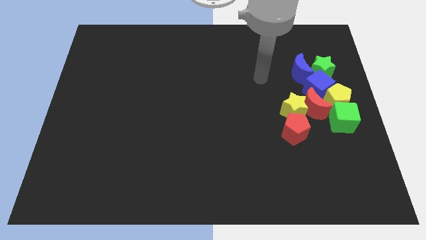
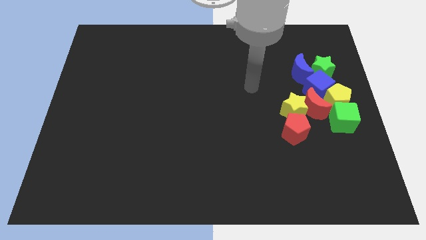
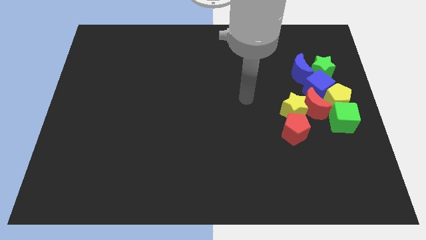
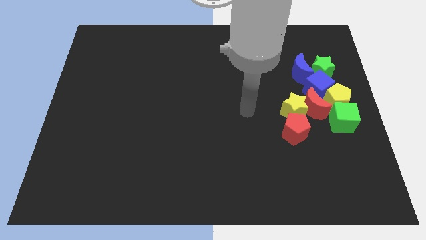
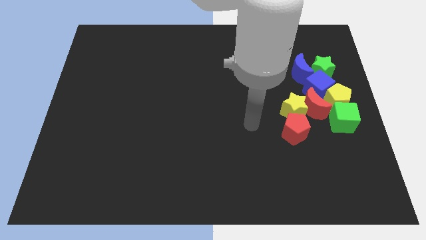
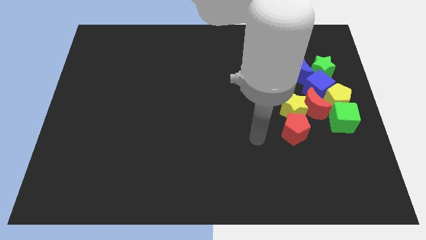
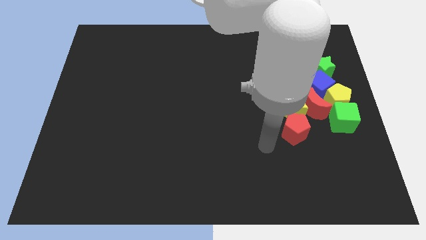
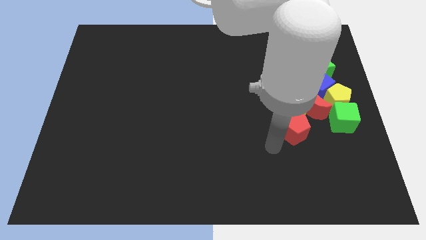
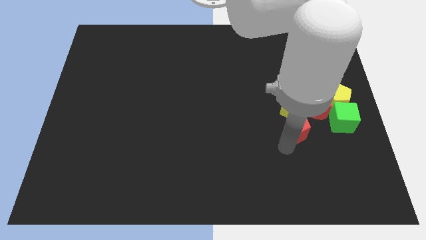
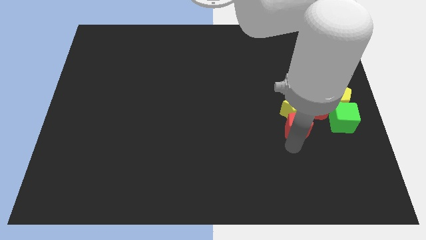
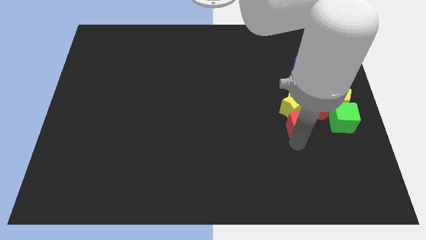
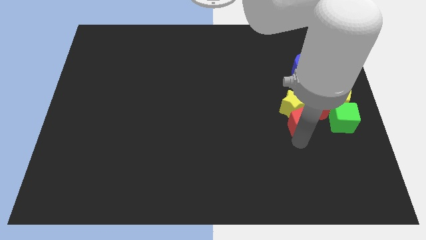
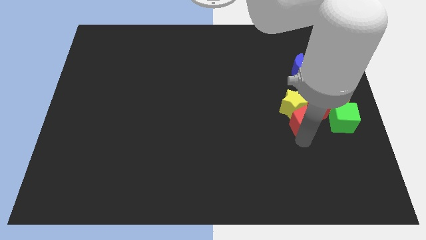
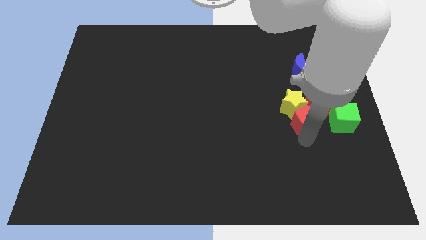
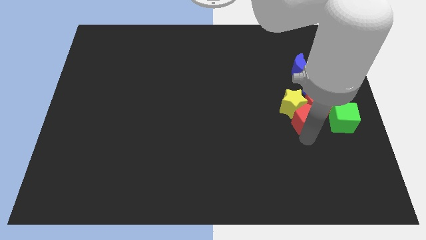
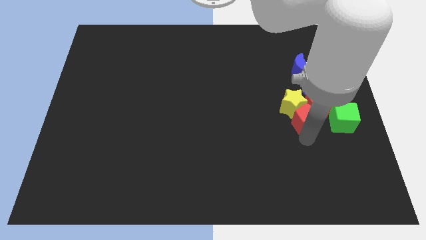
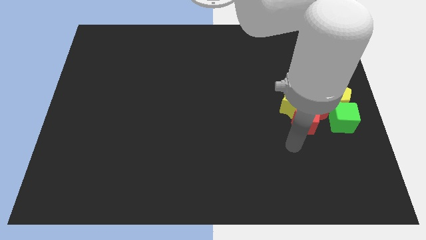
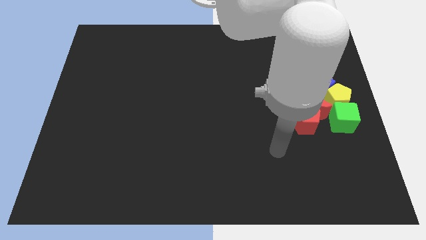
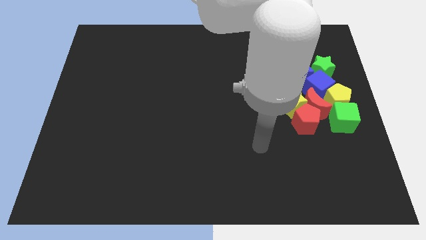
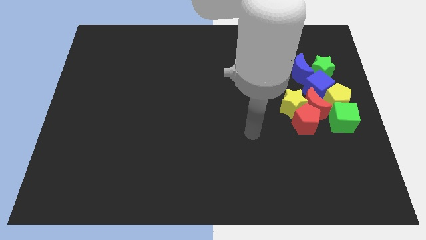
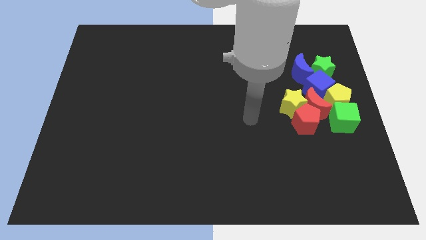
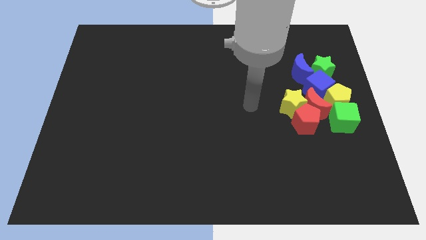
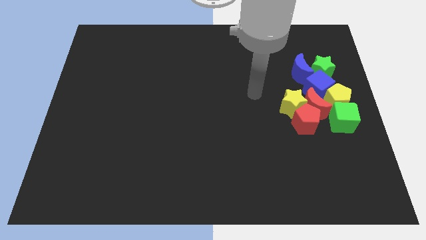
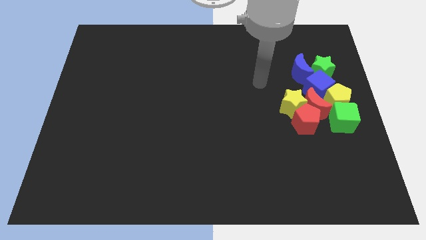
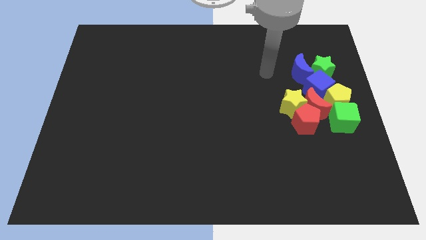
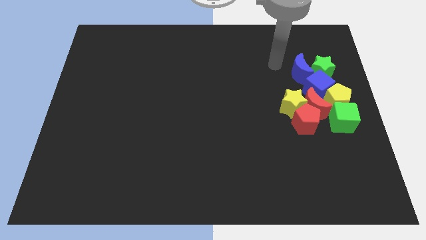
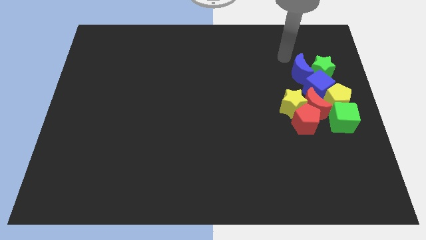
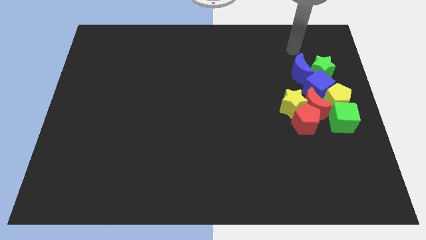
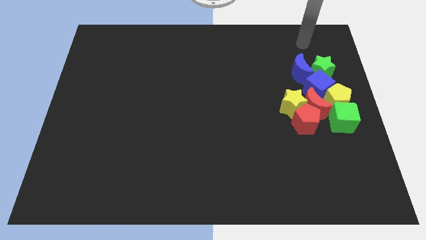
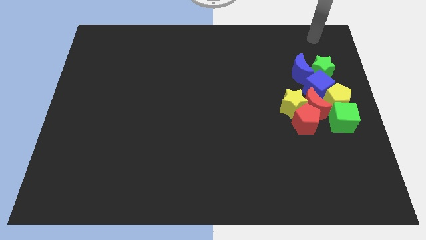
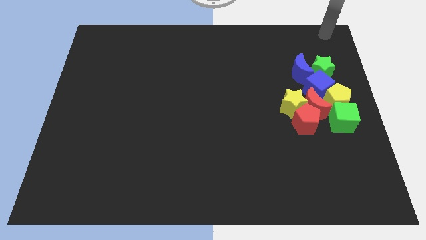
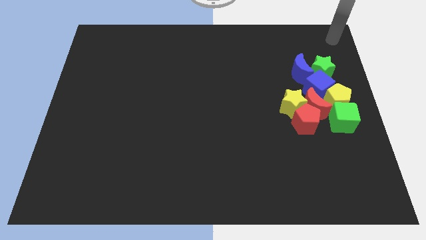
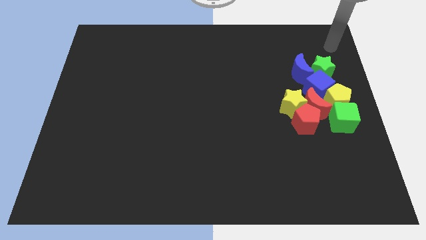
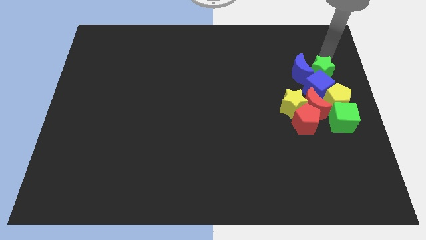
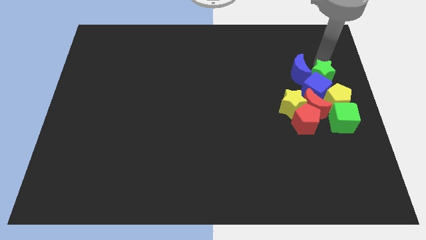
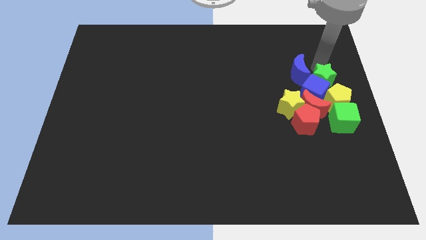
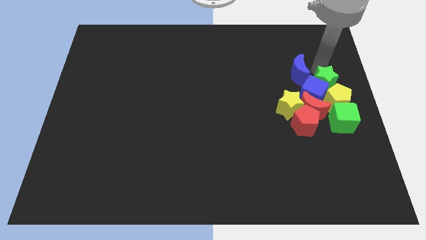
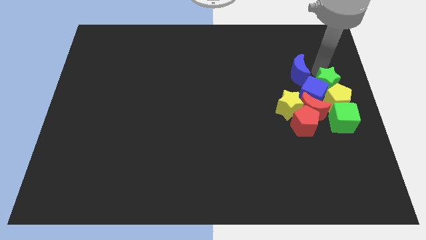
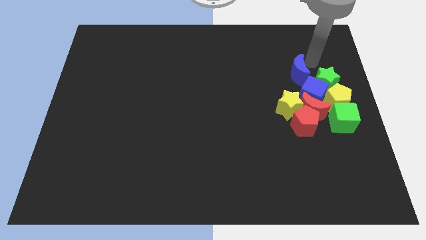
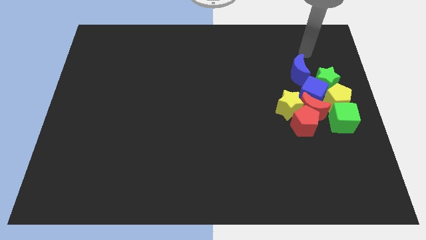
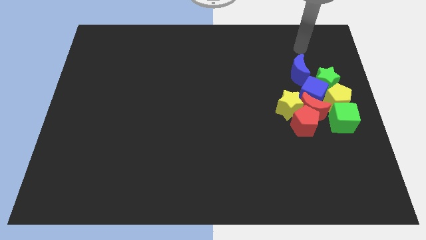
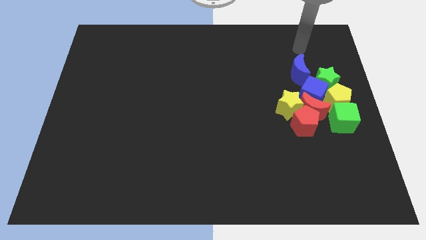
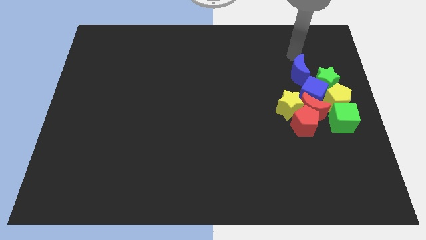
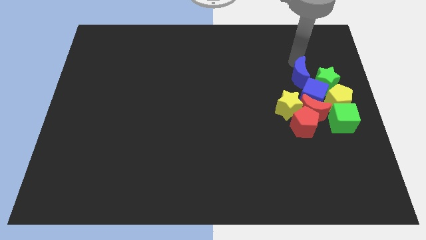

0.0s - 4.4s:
slightly push group of blocks downward

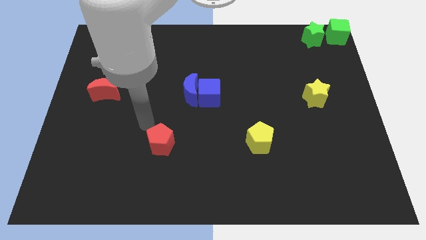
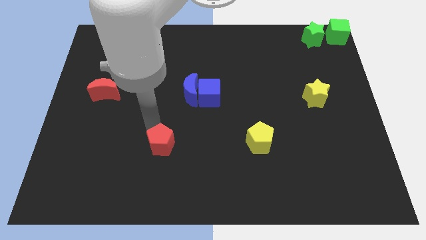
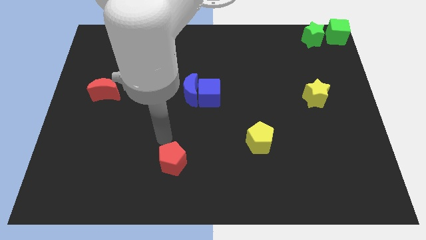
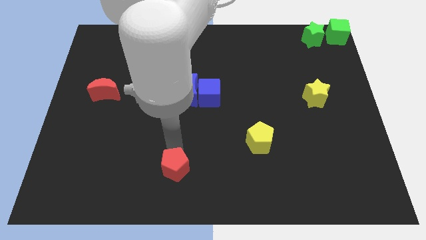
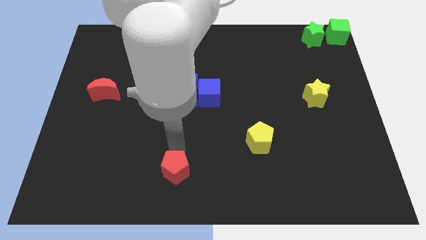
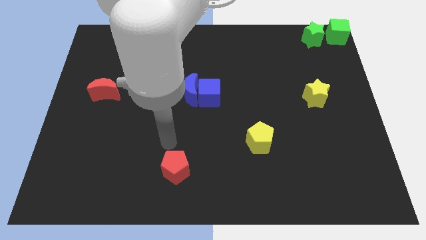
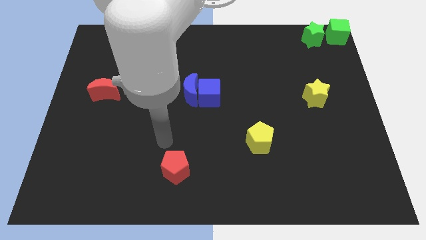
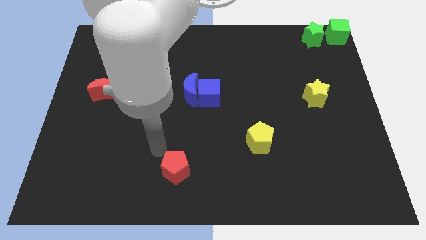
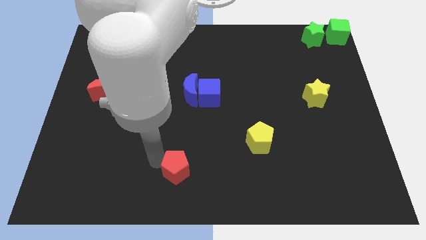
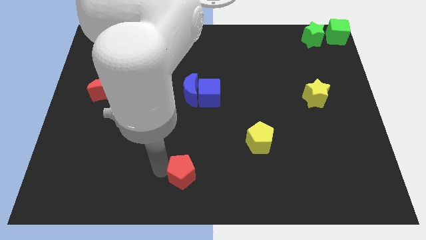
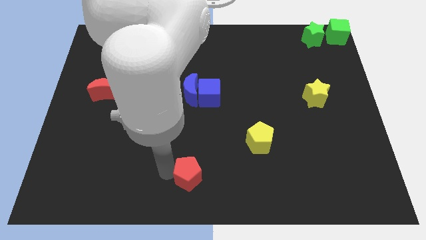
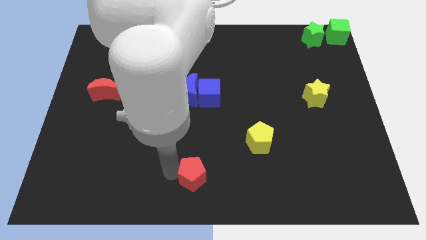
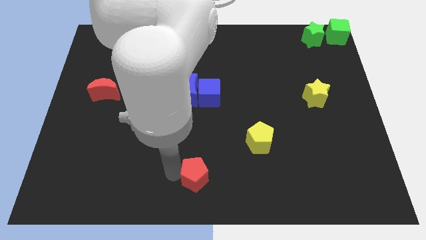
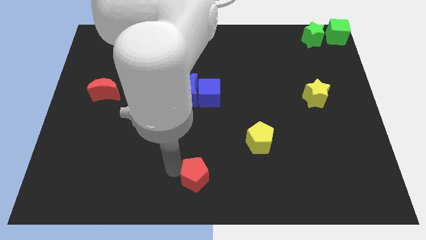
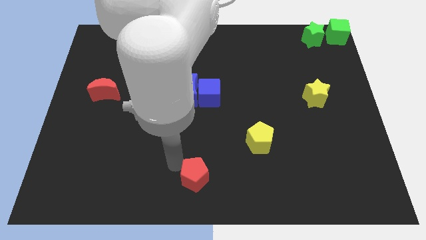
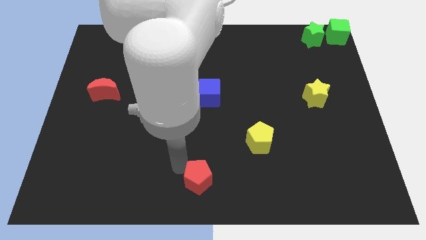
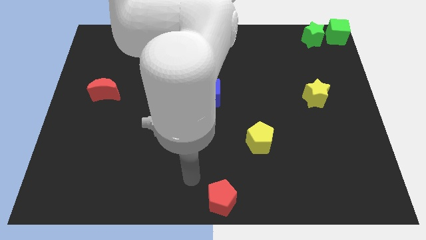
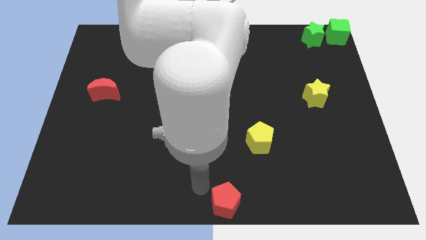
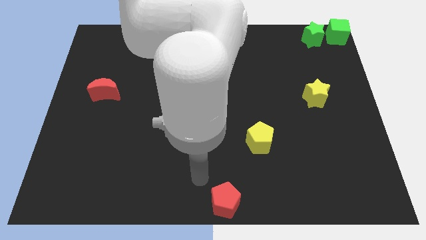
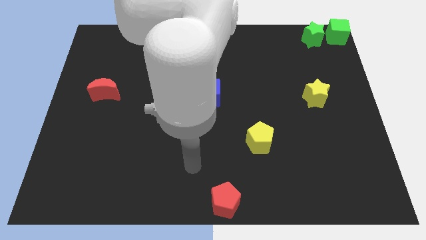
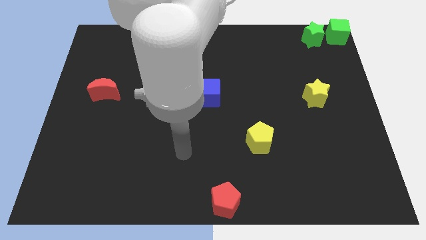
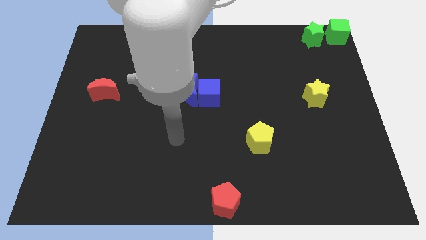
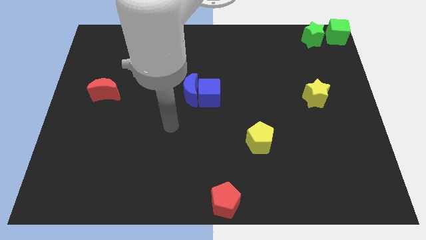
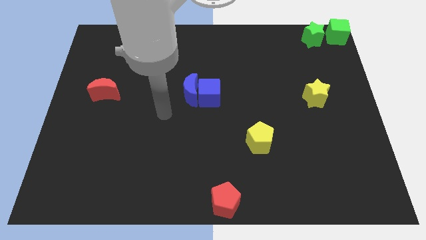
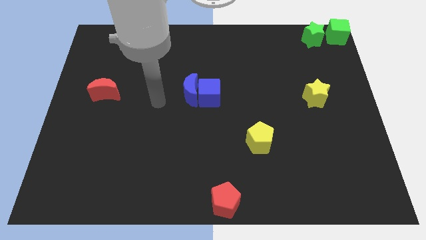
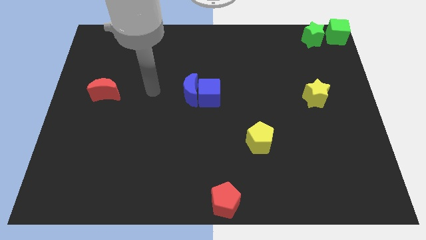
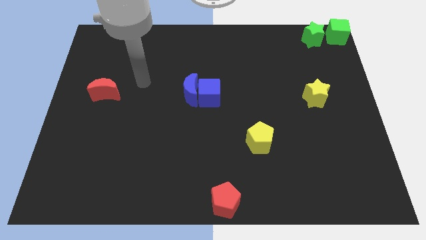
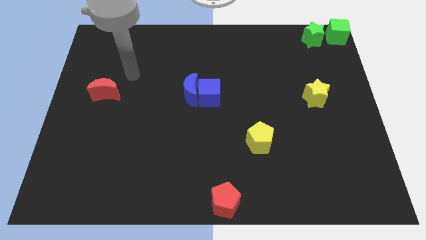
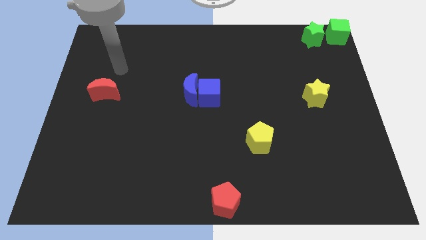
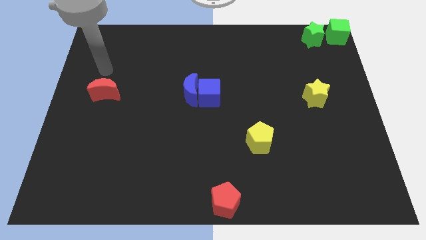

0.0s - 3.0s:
put the red pentagon at the bottom center of the board

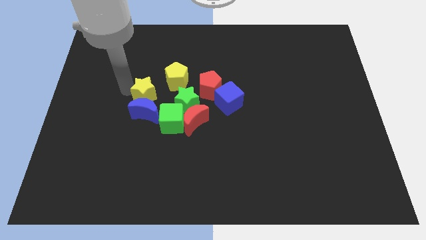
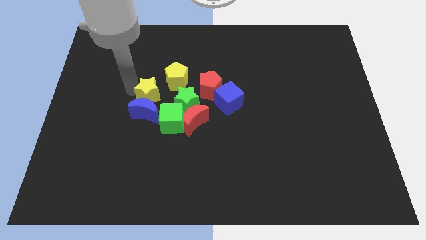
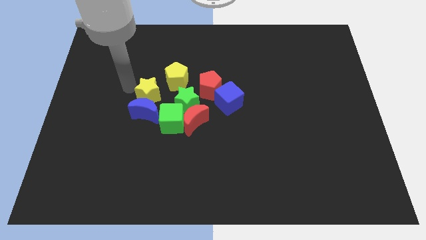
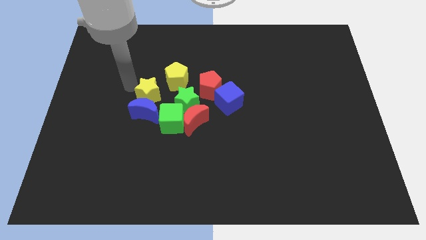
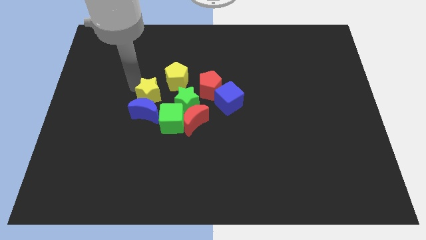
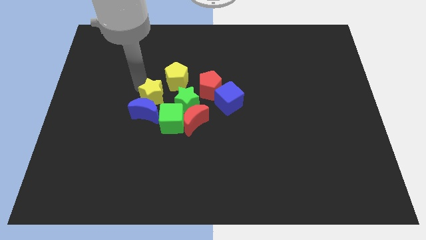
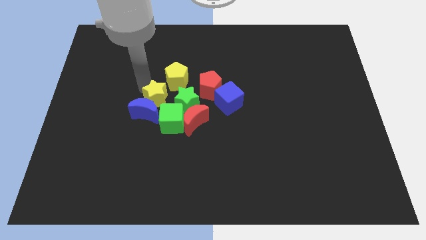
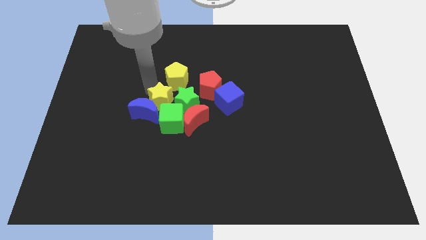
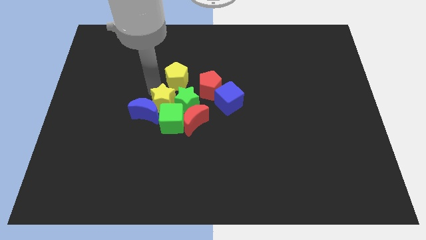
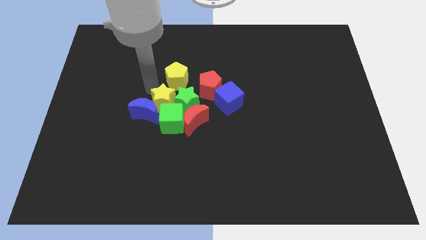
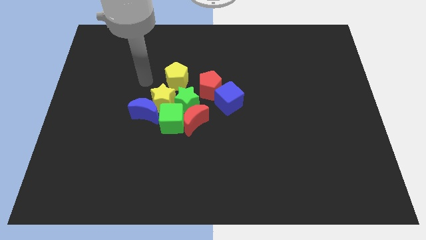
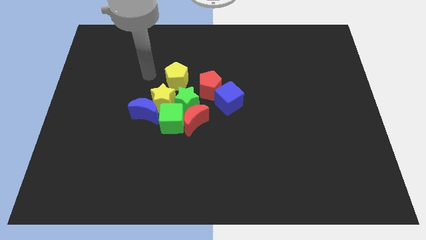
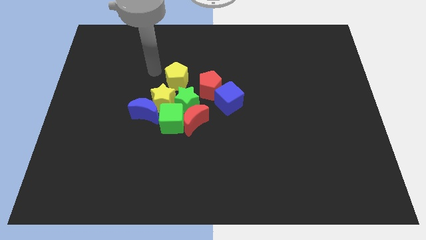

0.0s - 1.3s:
place the yellow star to the left of the green star

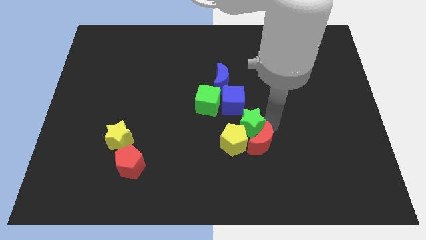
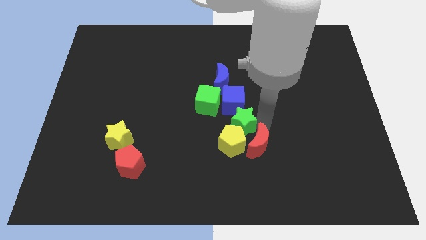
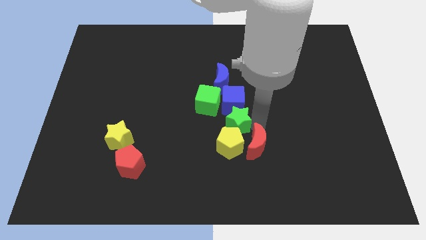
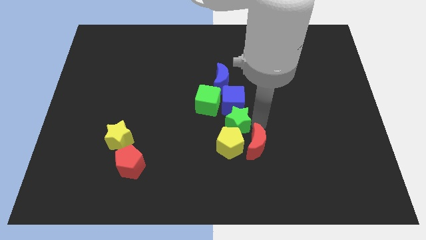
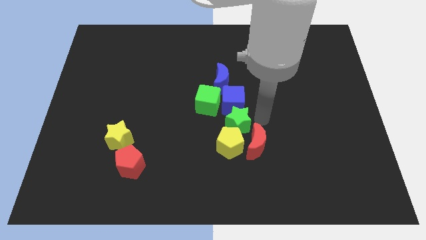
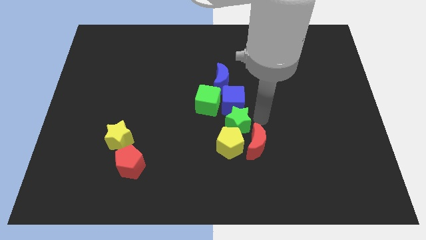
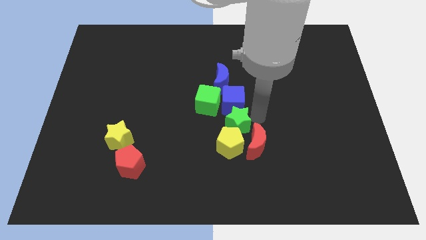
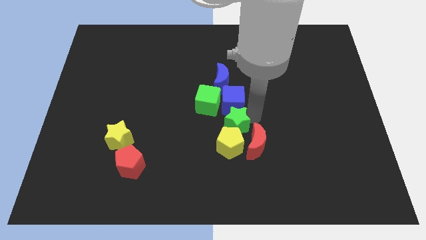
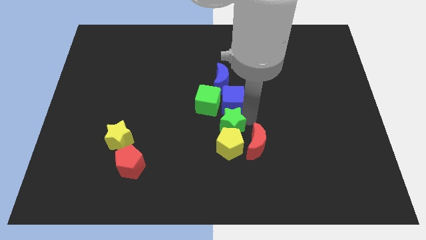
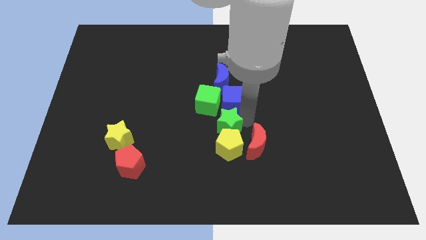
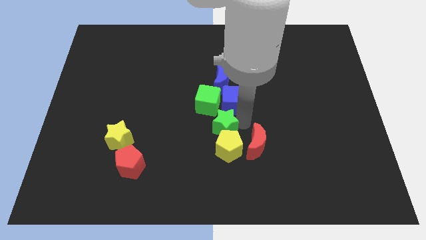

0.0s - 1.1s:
push green star on top of yellow pentagon
